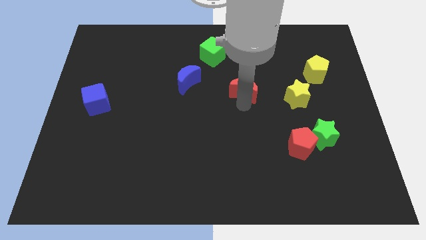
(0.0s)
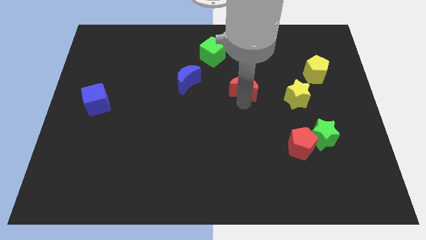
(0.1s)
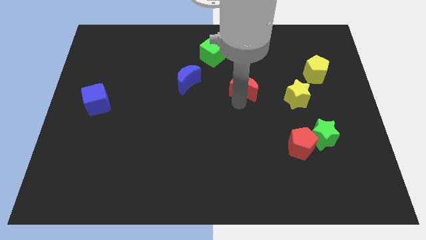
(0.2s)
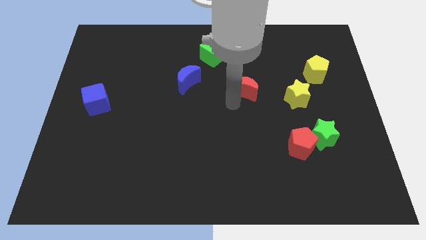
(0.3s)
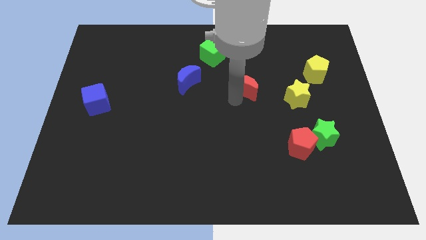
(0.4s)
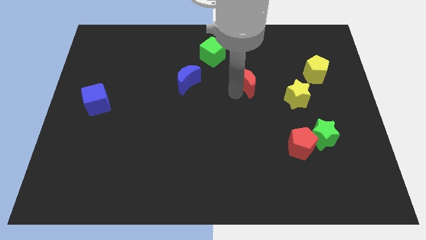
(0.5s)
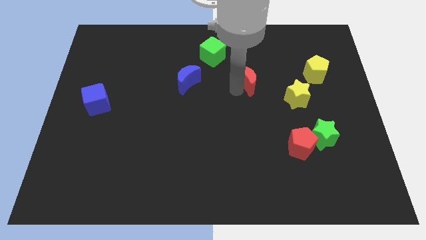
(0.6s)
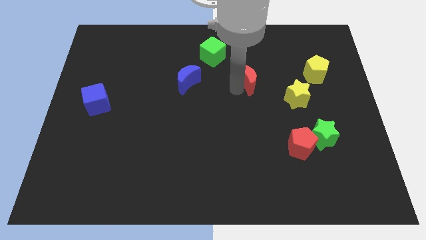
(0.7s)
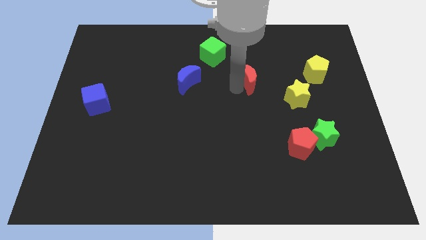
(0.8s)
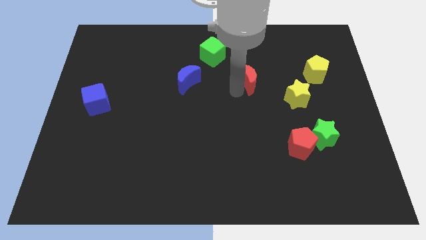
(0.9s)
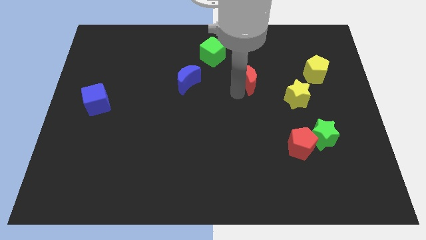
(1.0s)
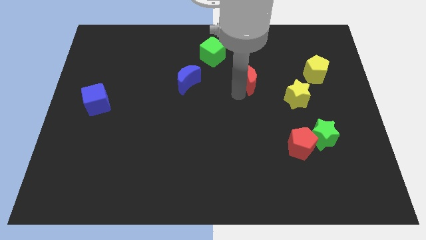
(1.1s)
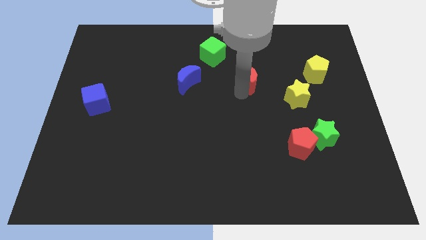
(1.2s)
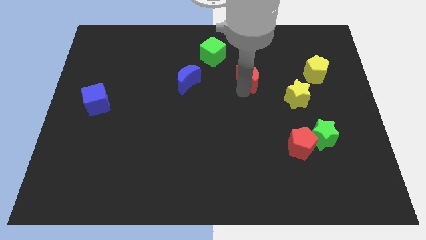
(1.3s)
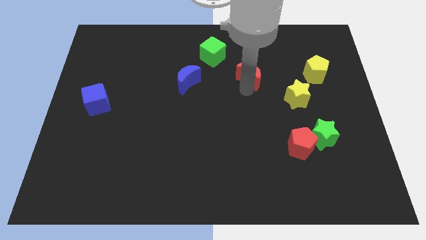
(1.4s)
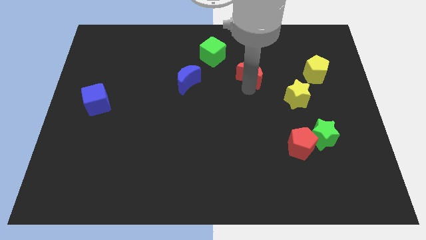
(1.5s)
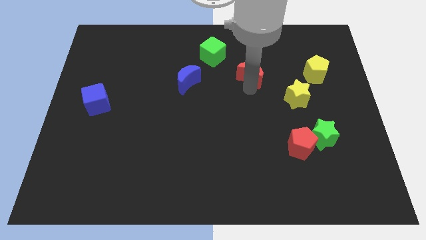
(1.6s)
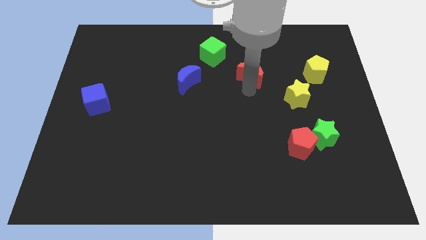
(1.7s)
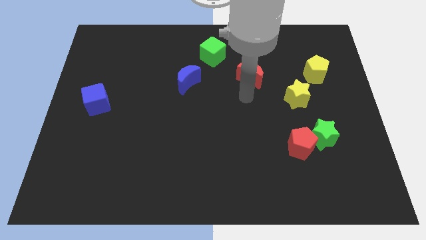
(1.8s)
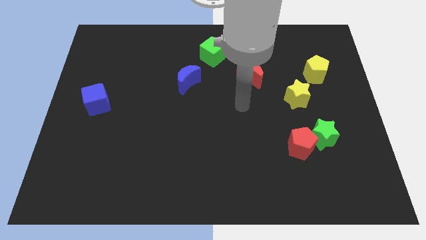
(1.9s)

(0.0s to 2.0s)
place the red crescent in between the blue crescent and yellow pentagon

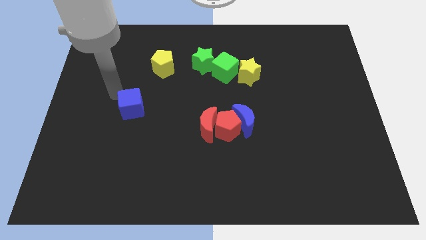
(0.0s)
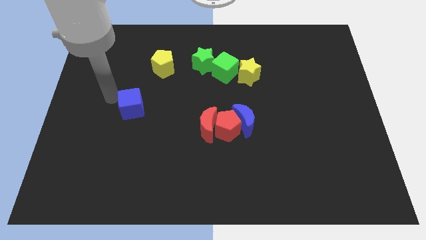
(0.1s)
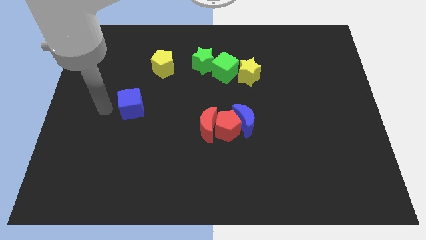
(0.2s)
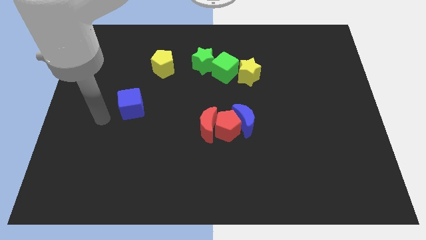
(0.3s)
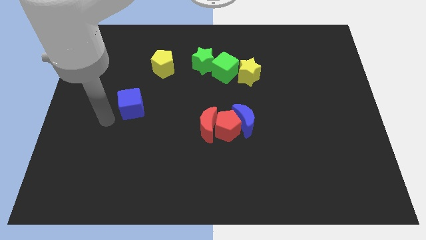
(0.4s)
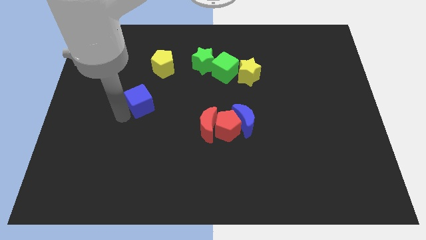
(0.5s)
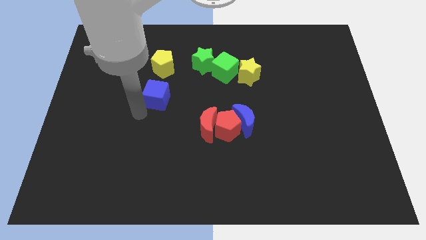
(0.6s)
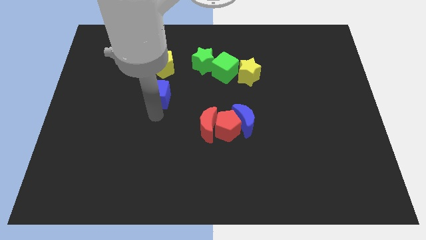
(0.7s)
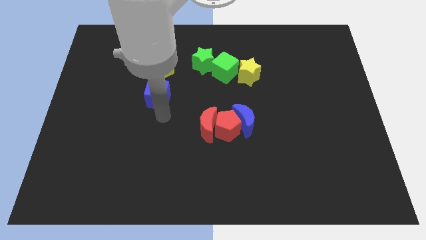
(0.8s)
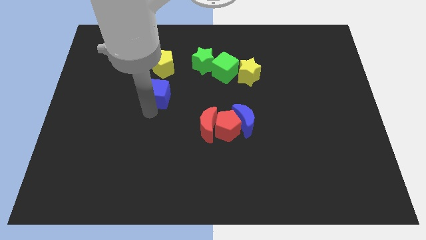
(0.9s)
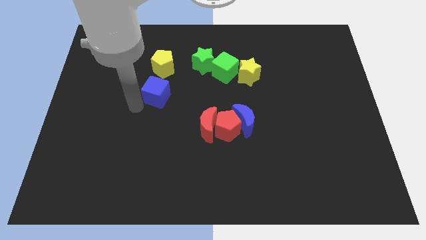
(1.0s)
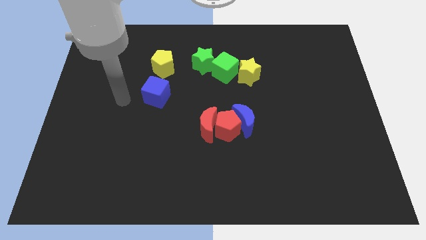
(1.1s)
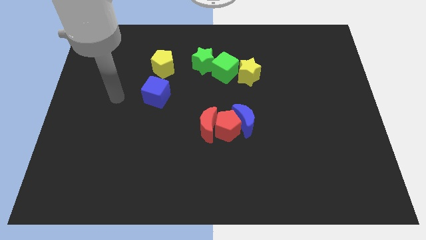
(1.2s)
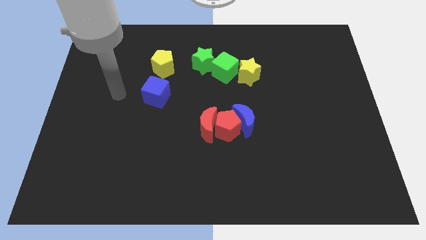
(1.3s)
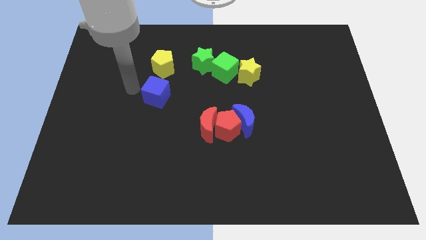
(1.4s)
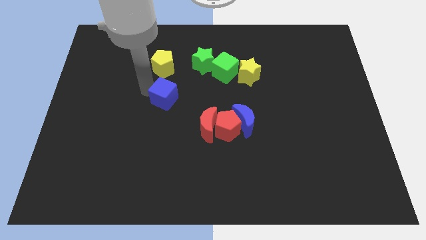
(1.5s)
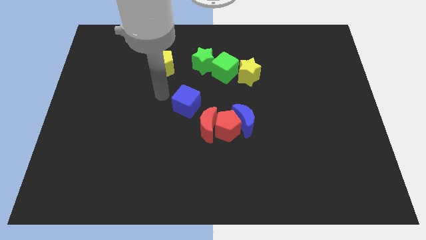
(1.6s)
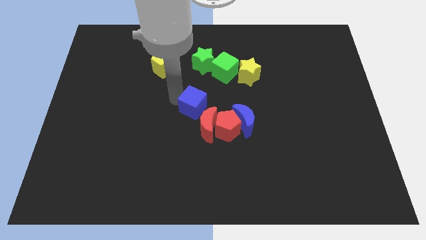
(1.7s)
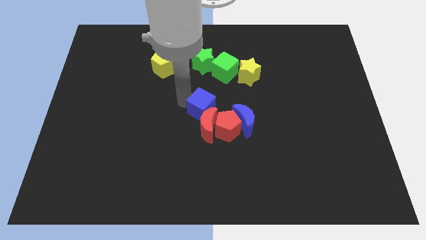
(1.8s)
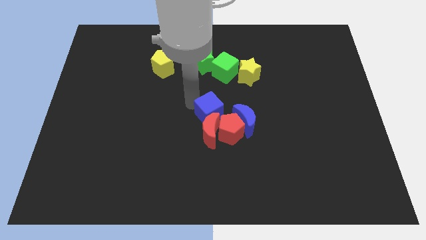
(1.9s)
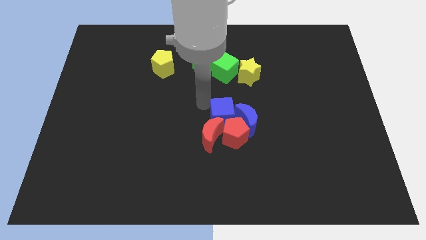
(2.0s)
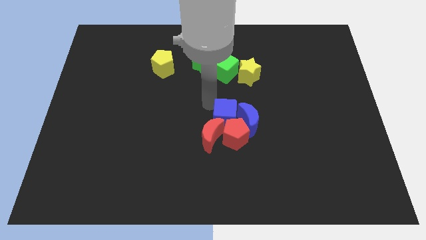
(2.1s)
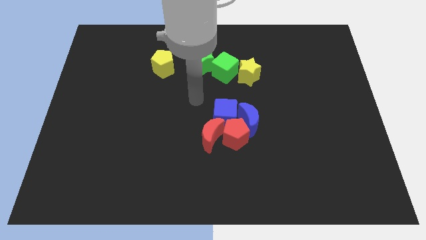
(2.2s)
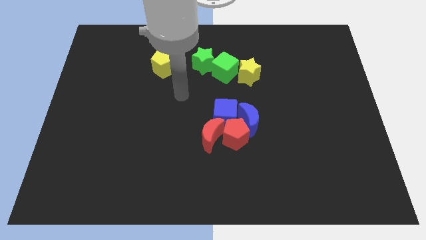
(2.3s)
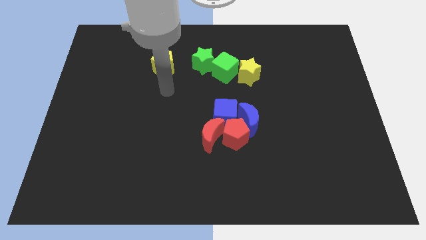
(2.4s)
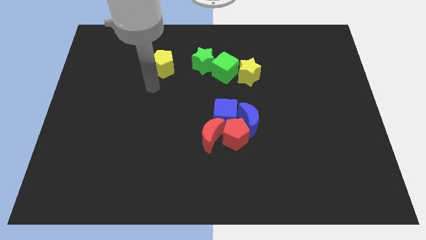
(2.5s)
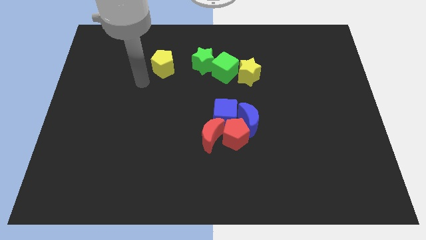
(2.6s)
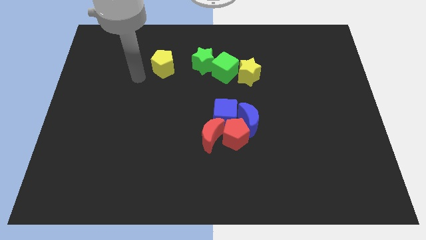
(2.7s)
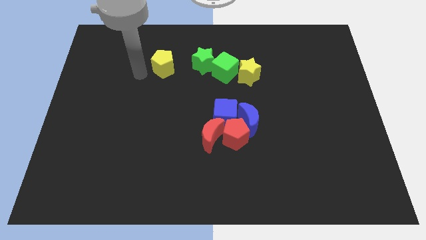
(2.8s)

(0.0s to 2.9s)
move the blue cube to the top of the red crescent

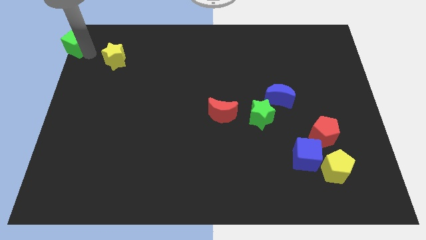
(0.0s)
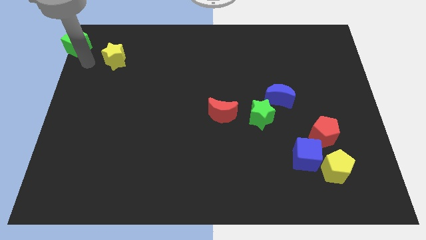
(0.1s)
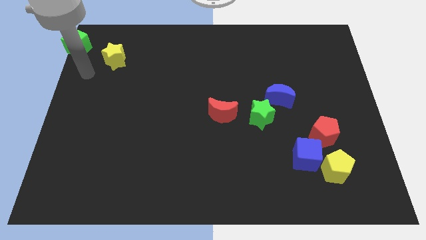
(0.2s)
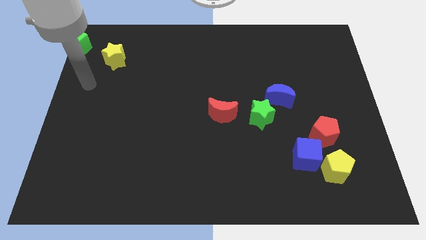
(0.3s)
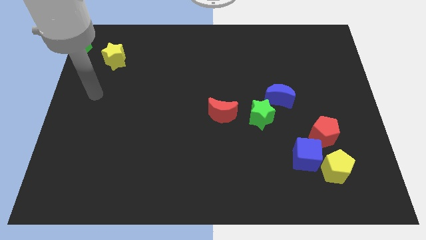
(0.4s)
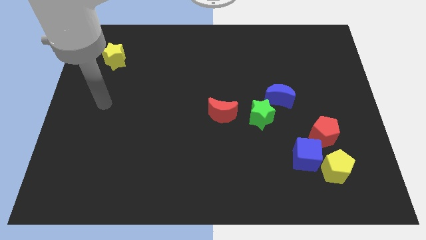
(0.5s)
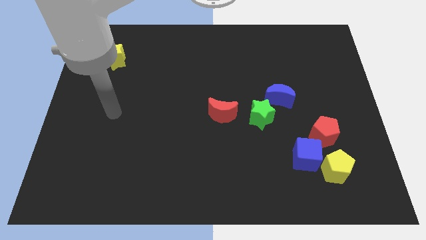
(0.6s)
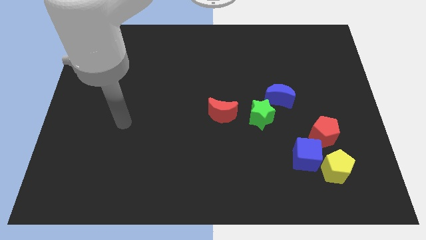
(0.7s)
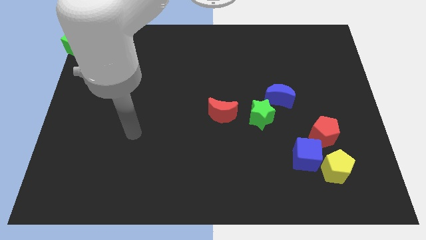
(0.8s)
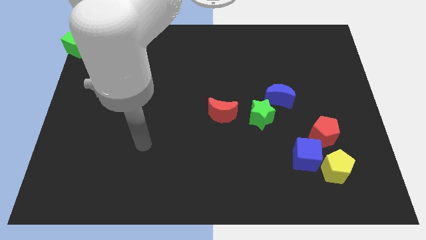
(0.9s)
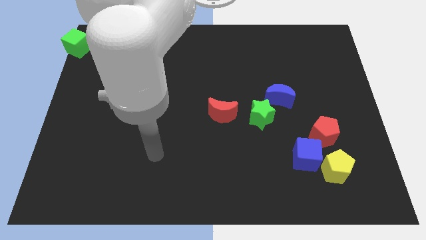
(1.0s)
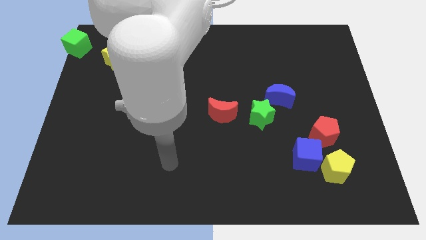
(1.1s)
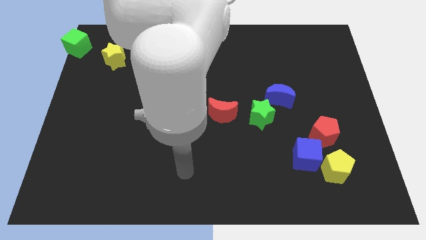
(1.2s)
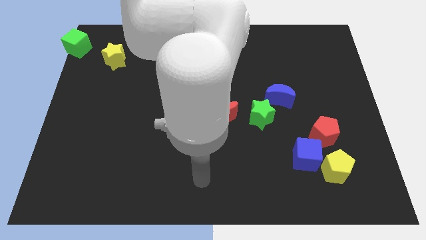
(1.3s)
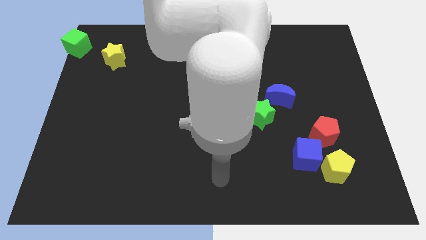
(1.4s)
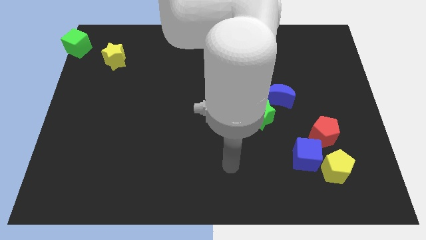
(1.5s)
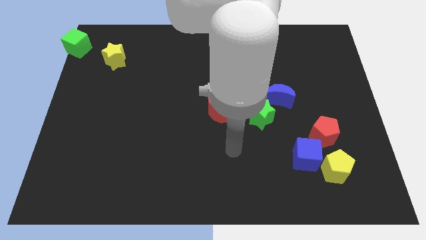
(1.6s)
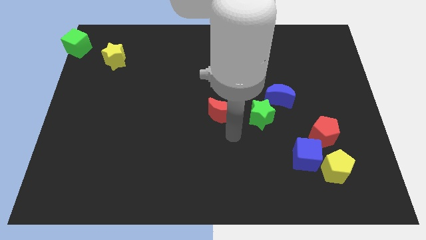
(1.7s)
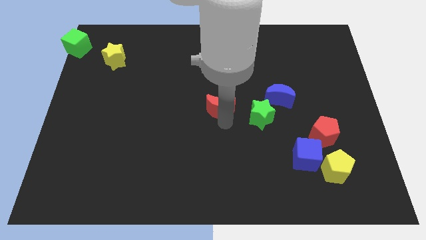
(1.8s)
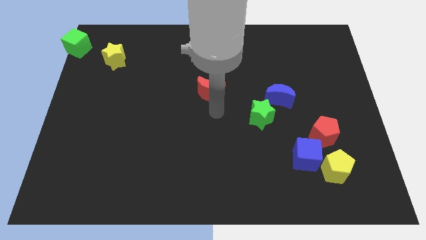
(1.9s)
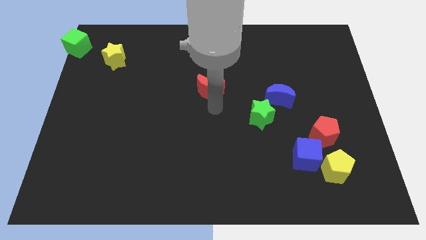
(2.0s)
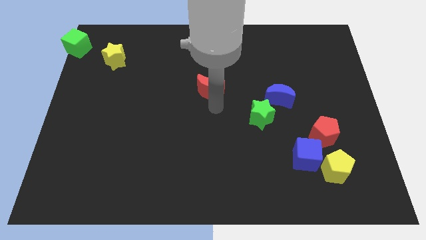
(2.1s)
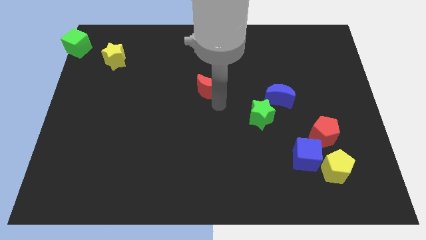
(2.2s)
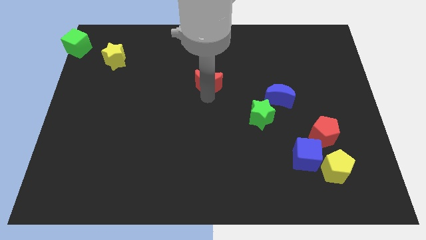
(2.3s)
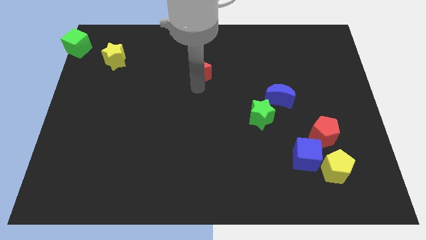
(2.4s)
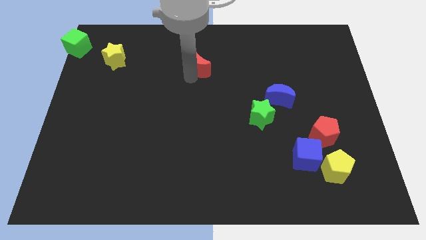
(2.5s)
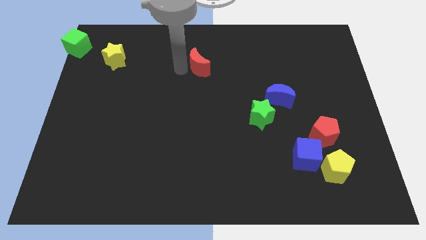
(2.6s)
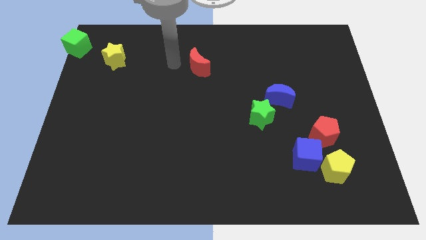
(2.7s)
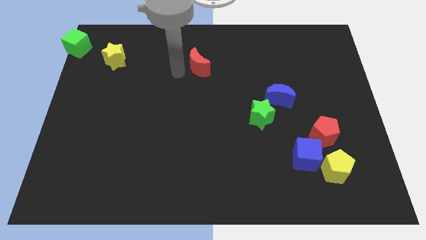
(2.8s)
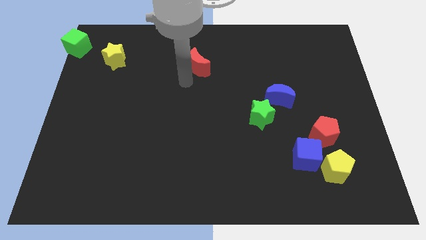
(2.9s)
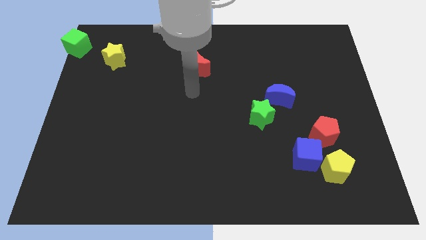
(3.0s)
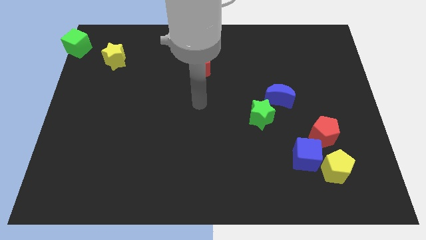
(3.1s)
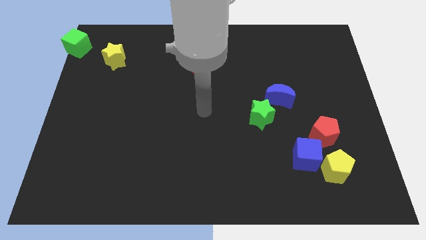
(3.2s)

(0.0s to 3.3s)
move red moon parallel to the yellow star

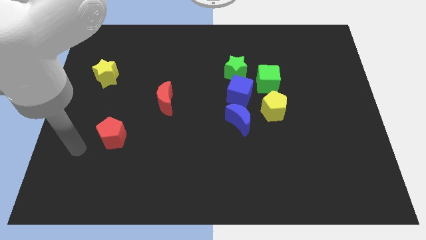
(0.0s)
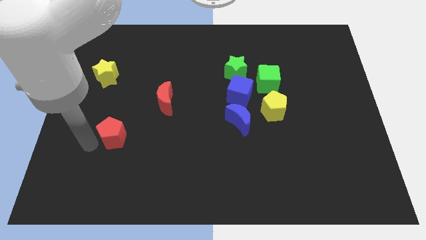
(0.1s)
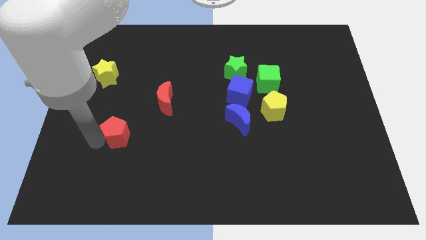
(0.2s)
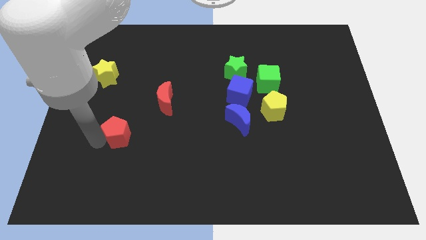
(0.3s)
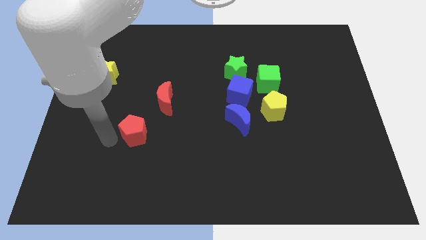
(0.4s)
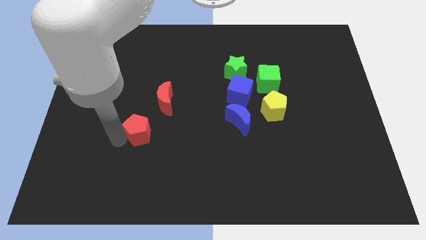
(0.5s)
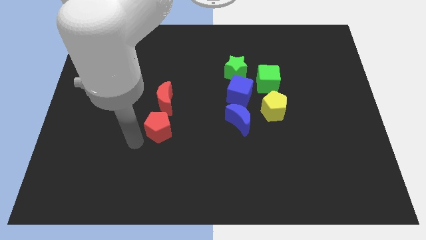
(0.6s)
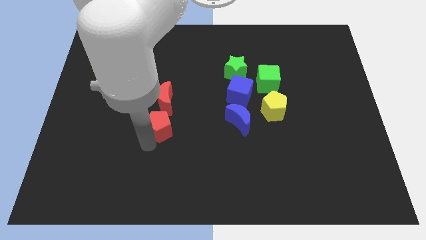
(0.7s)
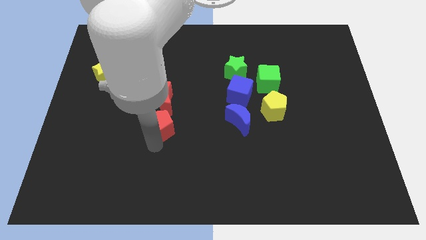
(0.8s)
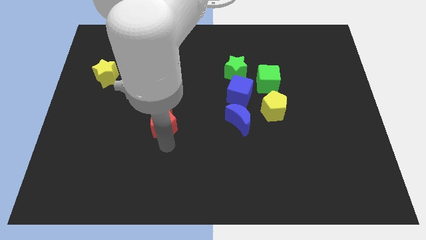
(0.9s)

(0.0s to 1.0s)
move red pentagon below red moon
